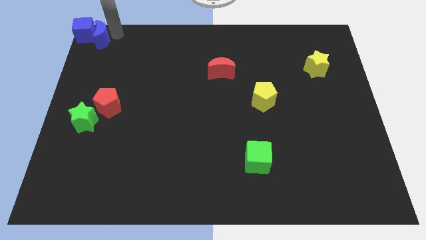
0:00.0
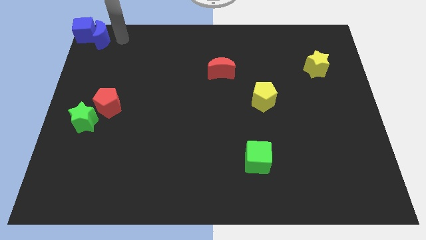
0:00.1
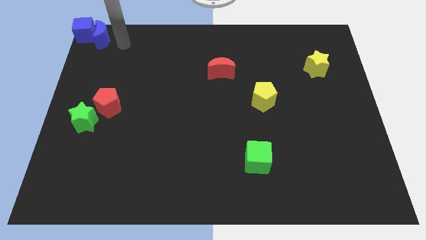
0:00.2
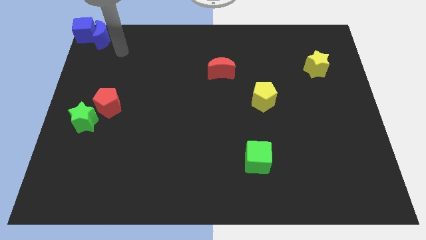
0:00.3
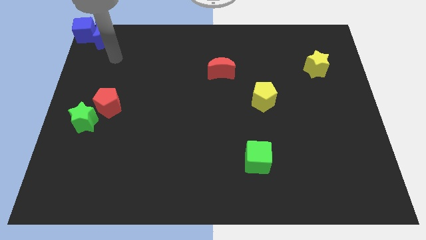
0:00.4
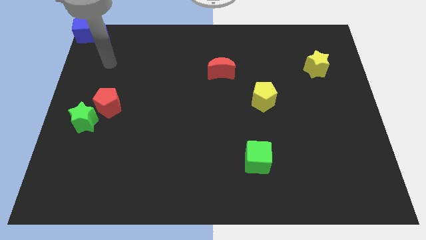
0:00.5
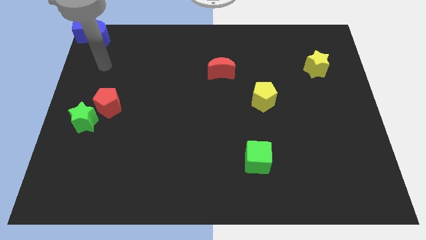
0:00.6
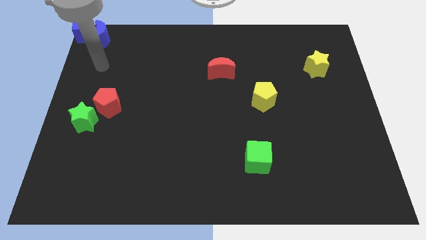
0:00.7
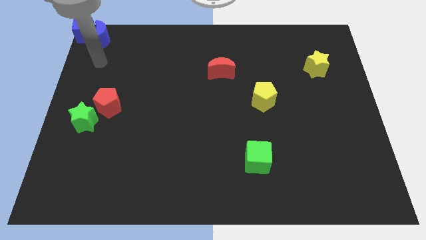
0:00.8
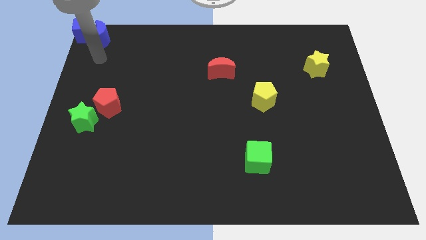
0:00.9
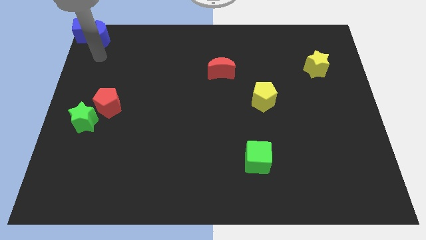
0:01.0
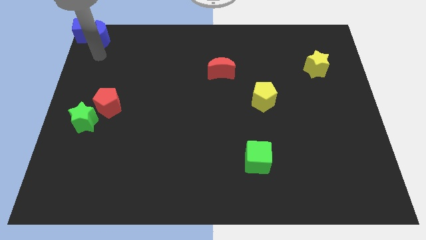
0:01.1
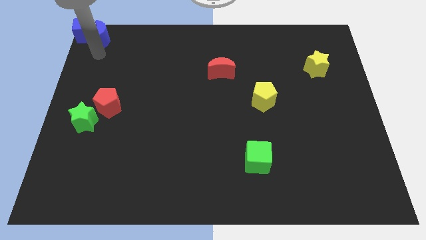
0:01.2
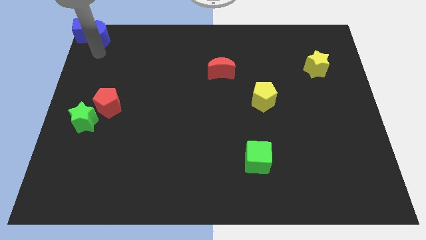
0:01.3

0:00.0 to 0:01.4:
point your arm at the bottom of the blue crescent

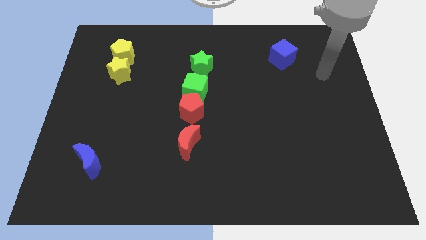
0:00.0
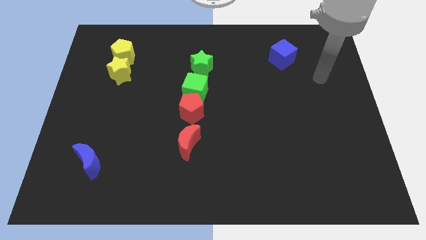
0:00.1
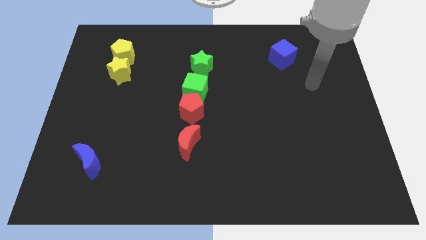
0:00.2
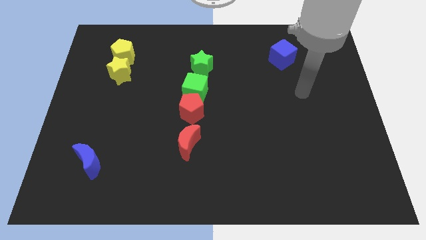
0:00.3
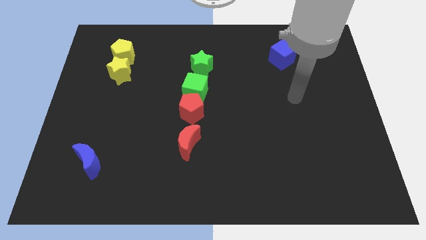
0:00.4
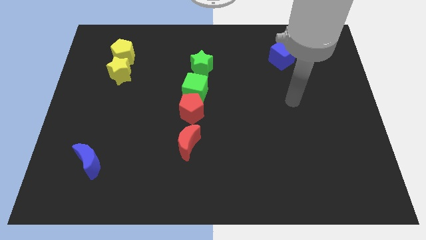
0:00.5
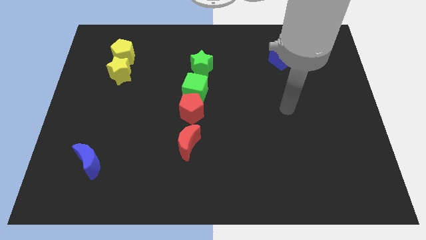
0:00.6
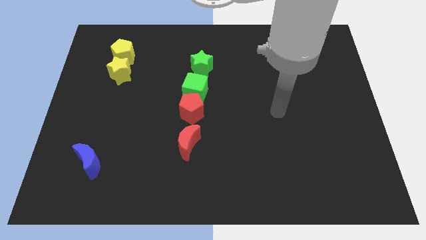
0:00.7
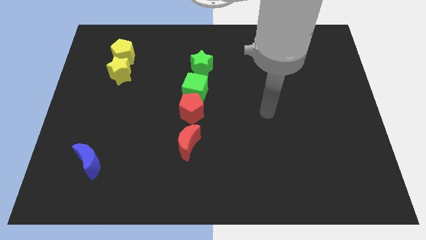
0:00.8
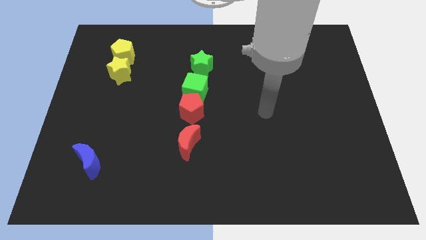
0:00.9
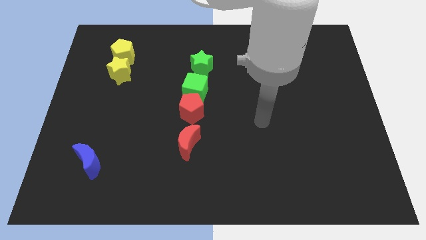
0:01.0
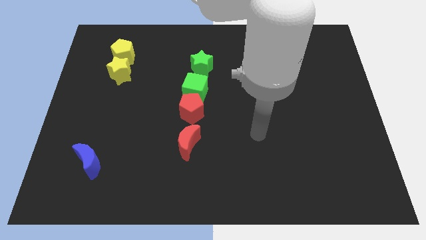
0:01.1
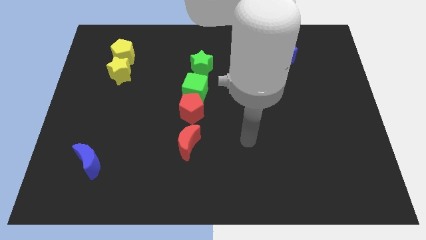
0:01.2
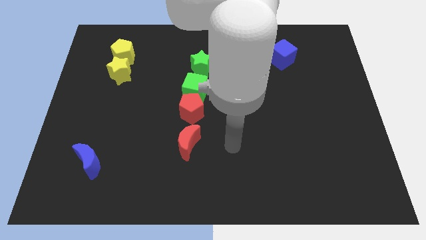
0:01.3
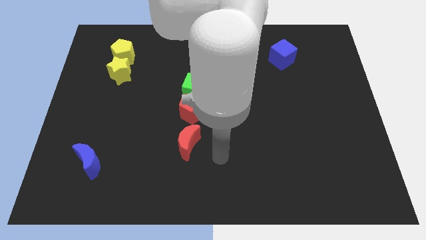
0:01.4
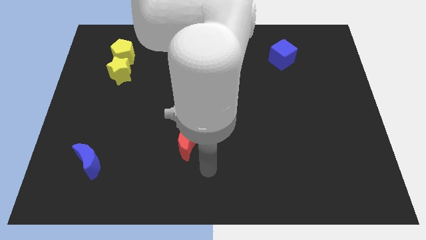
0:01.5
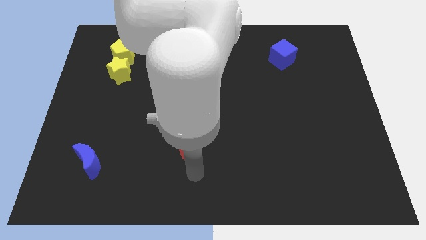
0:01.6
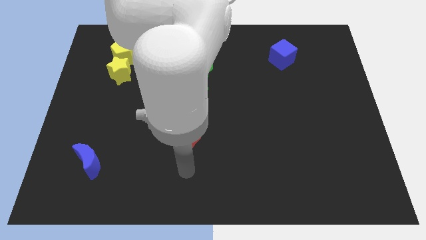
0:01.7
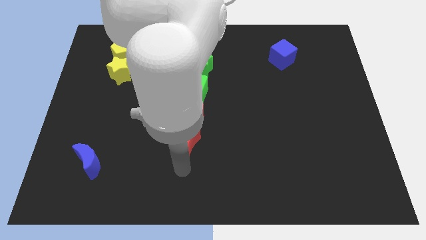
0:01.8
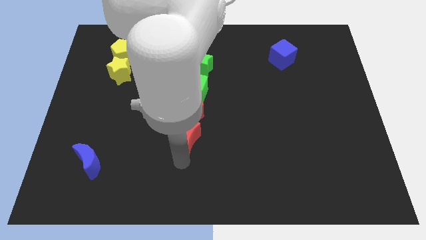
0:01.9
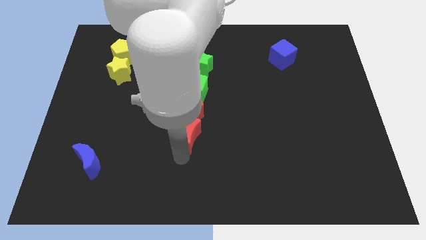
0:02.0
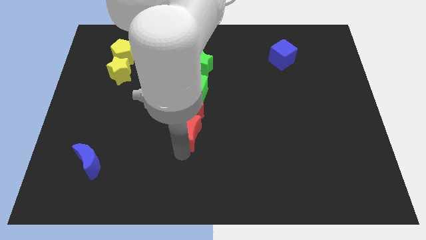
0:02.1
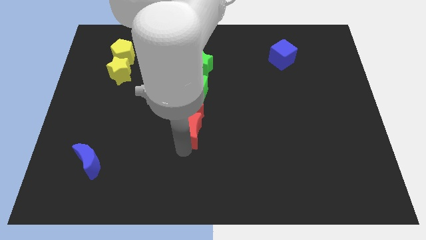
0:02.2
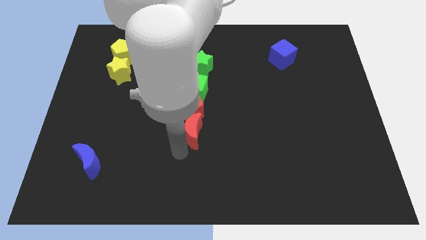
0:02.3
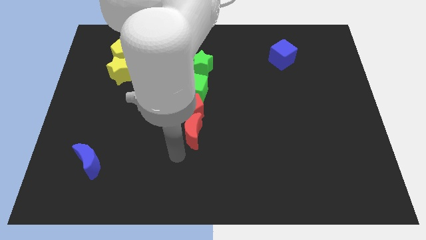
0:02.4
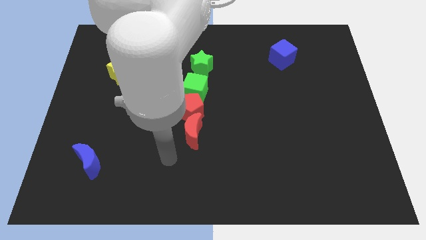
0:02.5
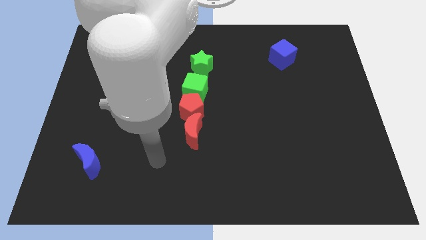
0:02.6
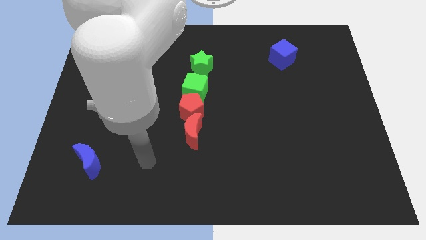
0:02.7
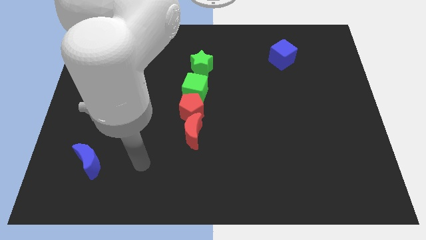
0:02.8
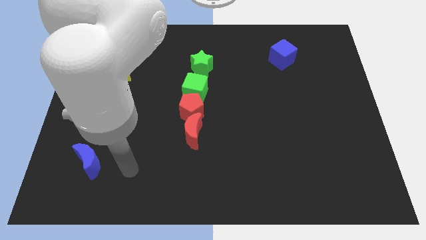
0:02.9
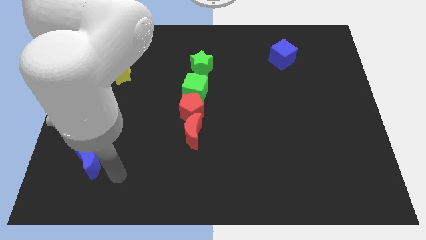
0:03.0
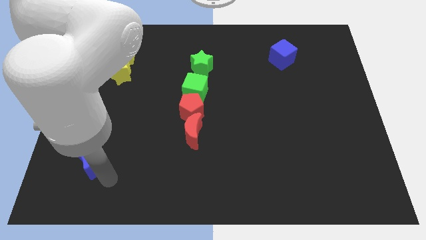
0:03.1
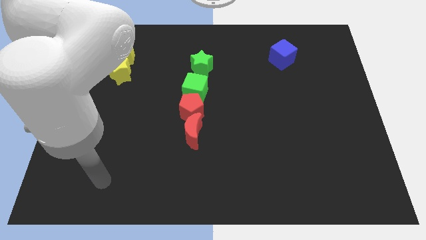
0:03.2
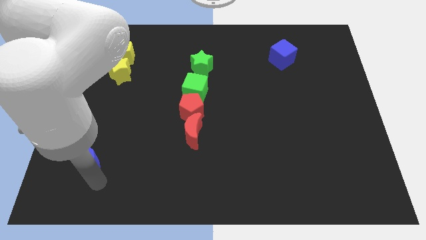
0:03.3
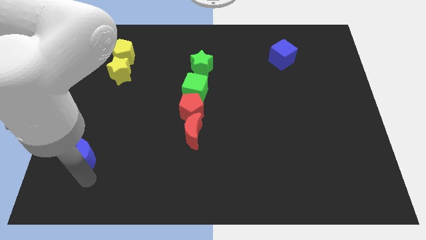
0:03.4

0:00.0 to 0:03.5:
move your arm close to the blue moon

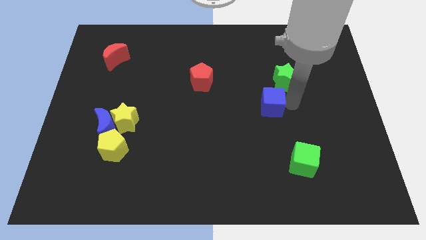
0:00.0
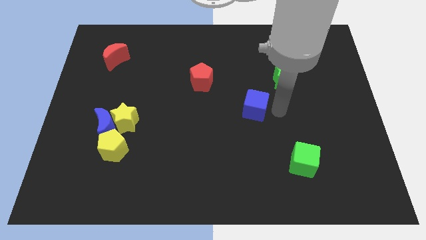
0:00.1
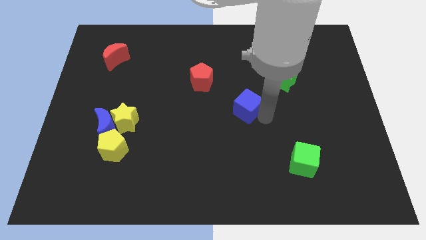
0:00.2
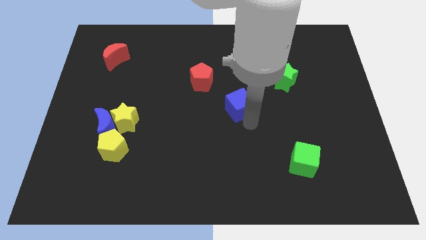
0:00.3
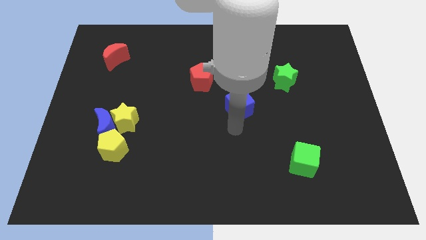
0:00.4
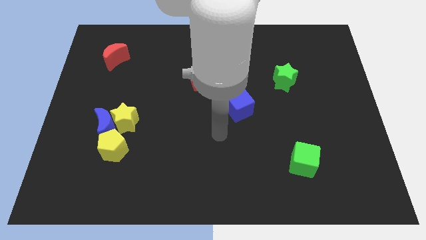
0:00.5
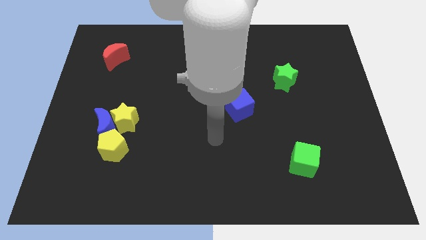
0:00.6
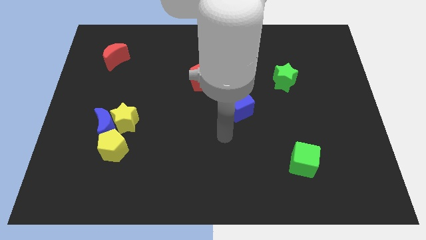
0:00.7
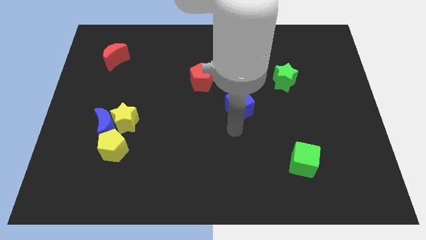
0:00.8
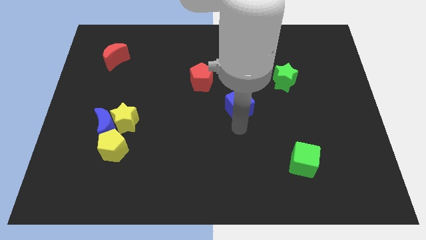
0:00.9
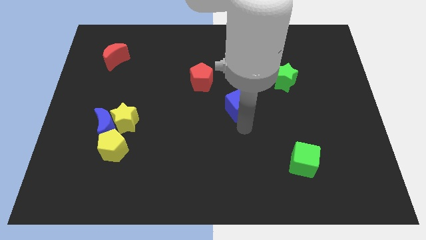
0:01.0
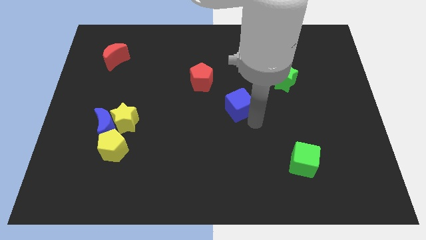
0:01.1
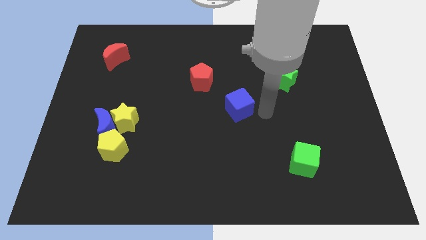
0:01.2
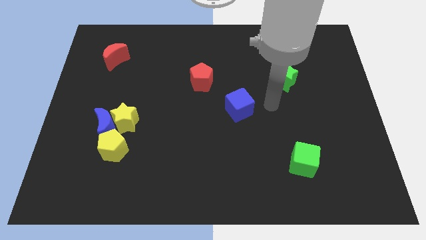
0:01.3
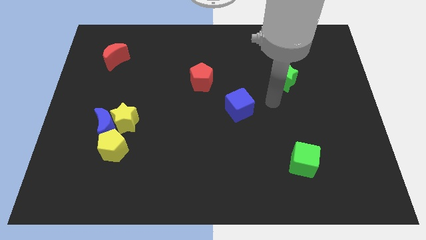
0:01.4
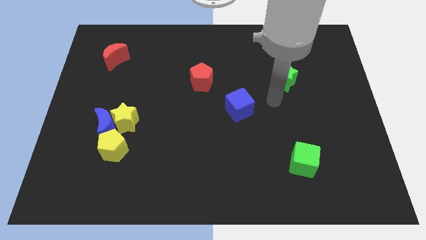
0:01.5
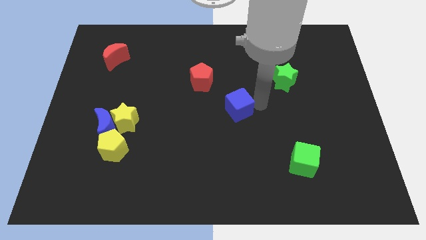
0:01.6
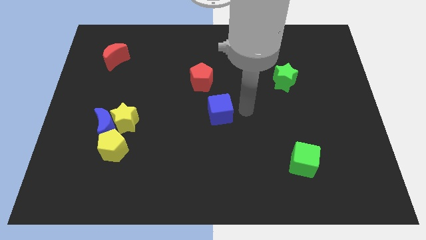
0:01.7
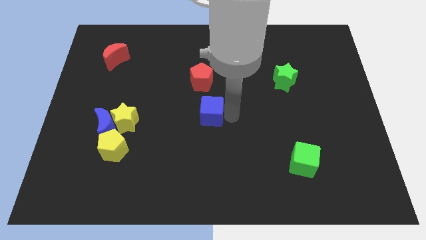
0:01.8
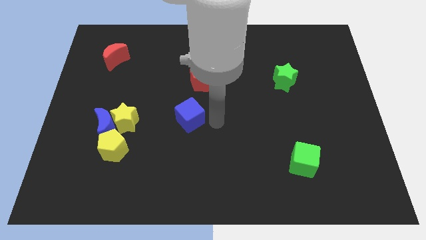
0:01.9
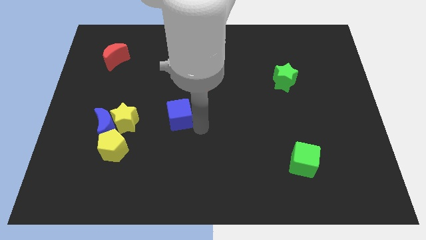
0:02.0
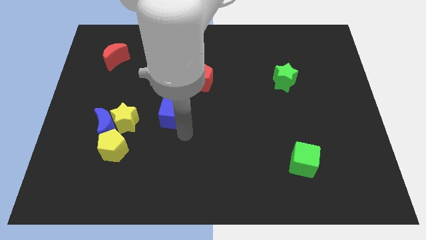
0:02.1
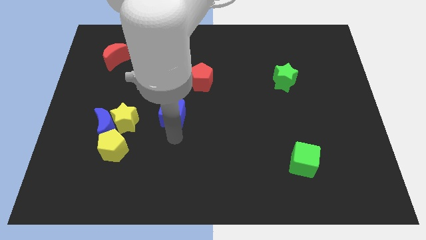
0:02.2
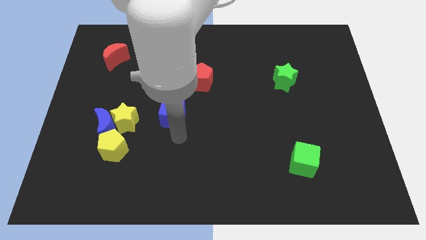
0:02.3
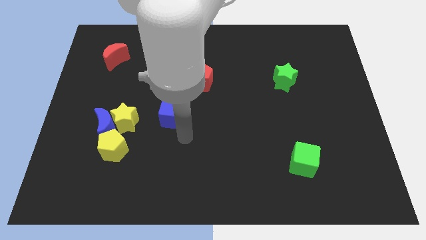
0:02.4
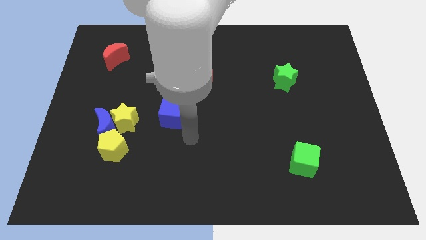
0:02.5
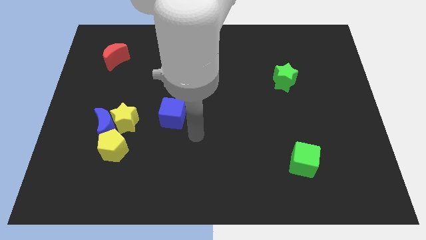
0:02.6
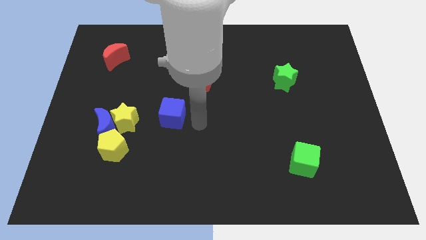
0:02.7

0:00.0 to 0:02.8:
move the blue cube to the bottom left of the red pentagon

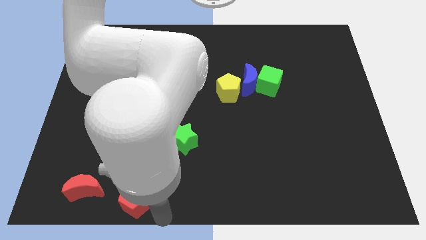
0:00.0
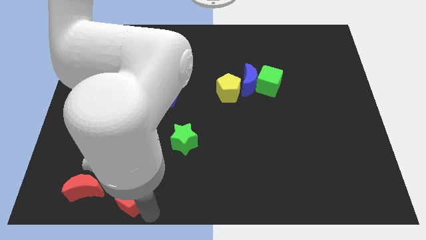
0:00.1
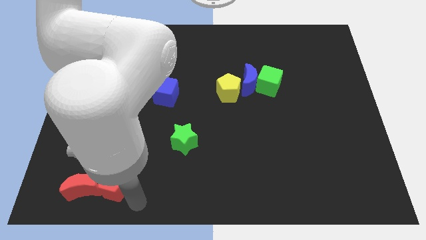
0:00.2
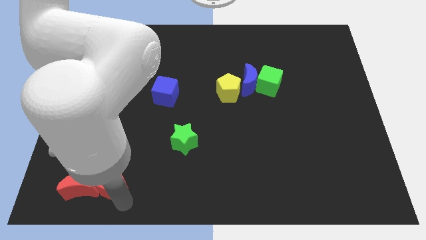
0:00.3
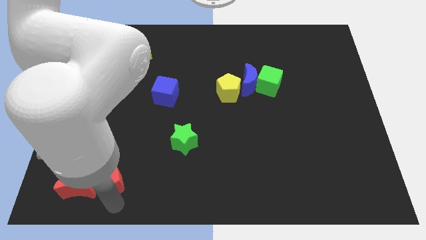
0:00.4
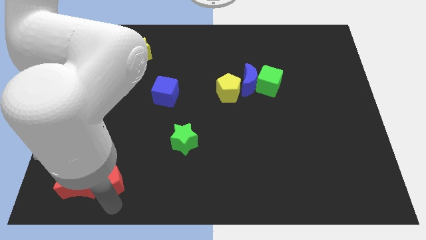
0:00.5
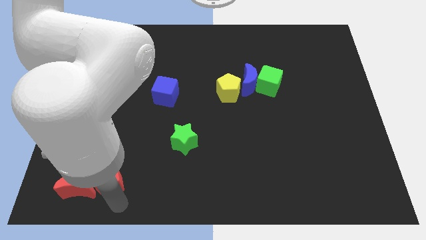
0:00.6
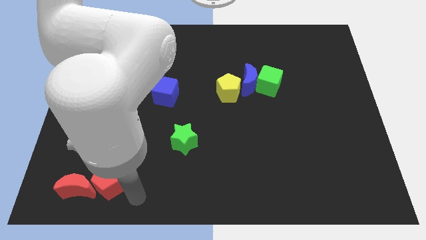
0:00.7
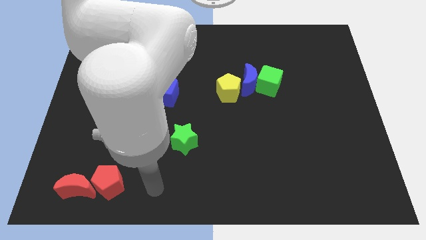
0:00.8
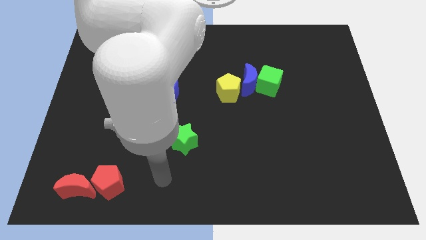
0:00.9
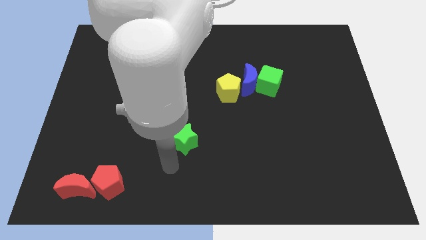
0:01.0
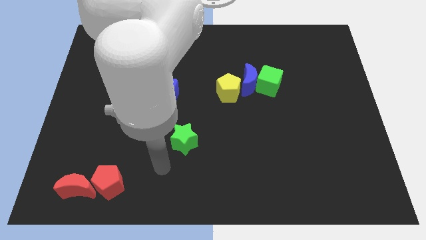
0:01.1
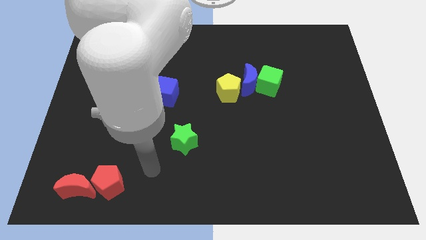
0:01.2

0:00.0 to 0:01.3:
push the red pentagon to the right of the red crescent
